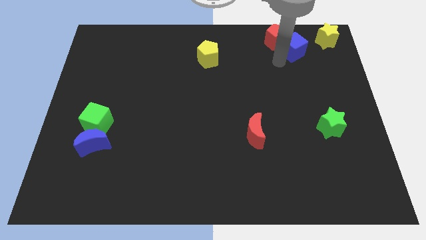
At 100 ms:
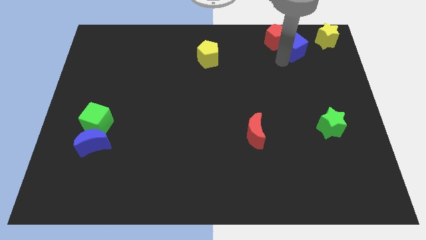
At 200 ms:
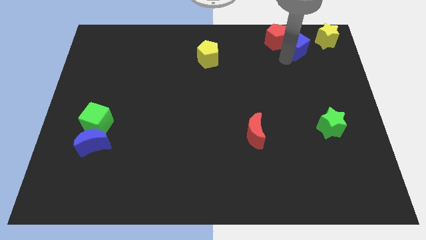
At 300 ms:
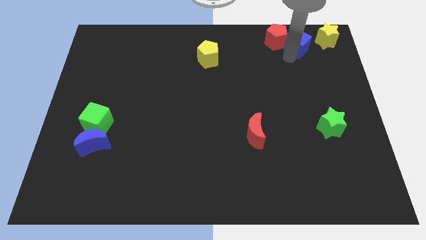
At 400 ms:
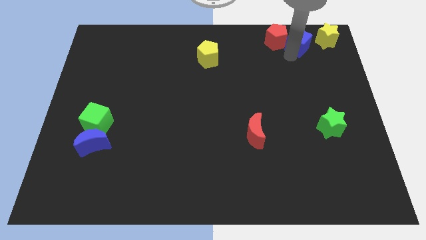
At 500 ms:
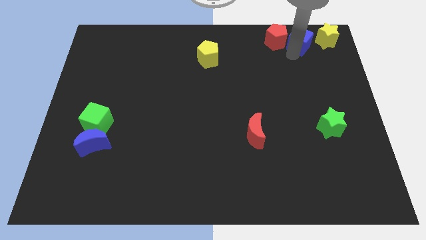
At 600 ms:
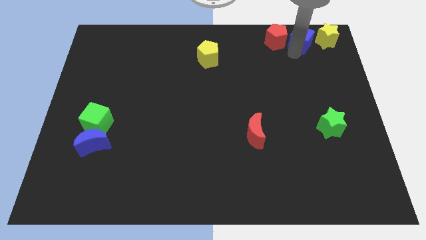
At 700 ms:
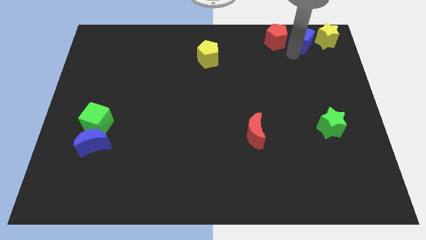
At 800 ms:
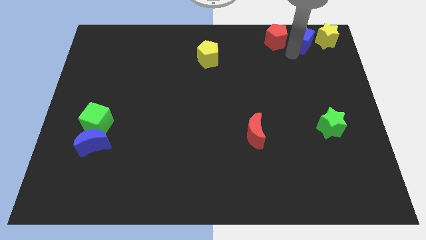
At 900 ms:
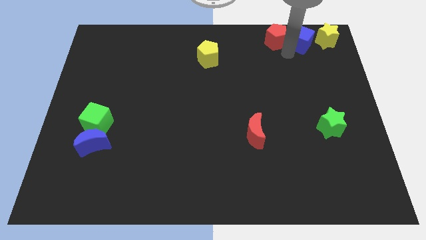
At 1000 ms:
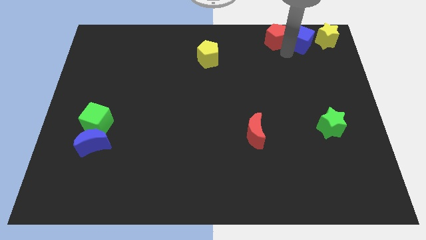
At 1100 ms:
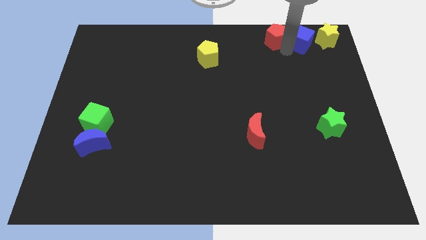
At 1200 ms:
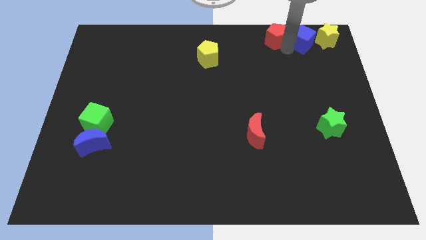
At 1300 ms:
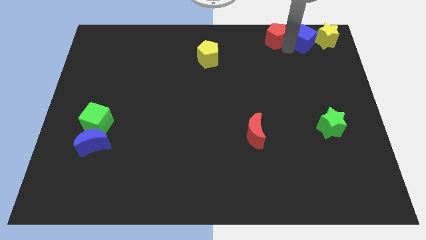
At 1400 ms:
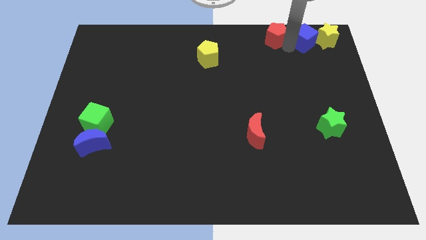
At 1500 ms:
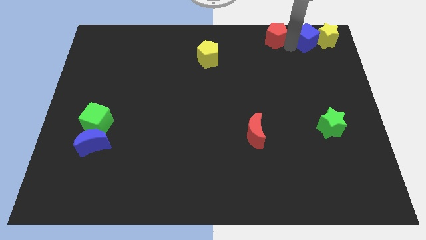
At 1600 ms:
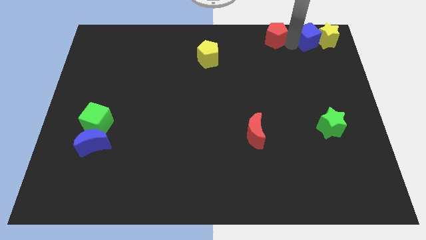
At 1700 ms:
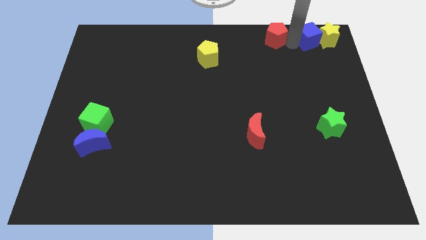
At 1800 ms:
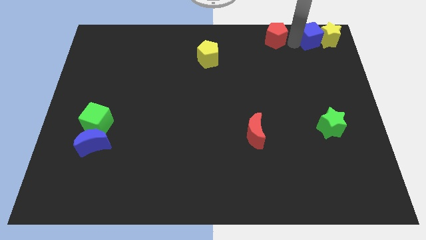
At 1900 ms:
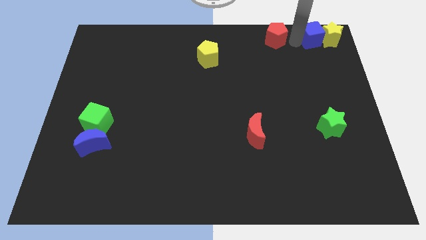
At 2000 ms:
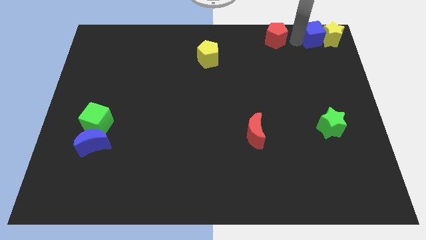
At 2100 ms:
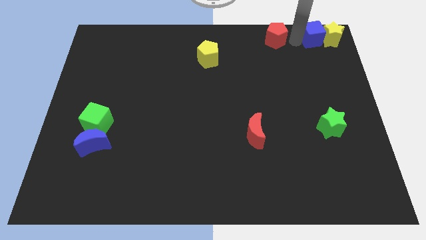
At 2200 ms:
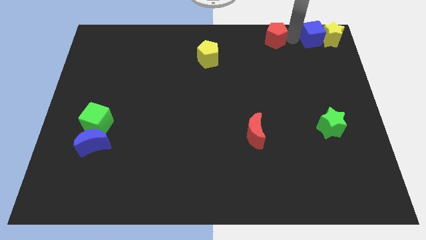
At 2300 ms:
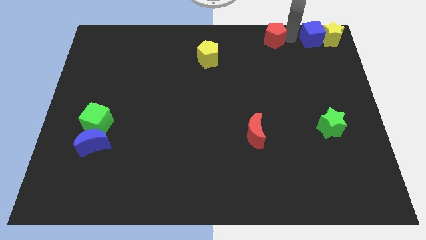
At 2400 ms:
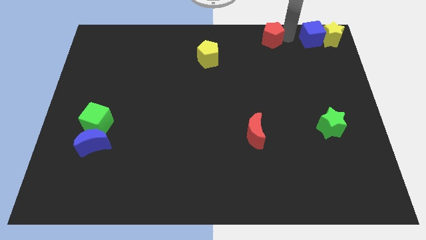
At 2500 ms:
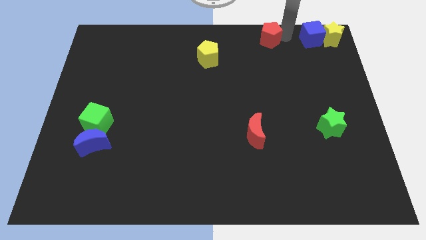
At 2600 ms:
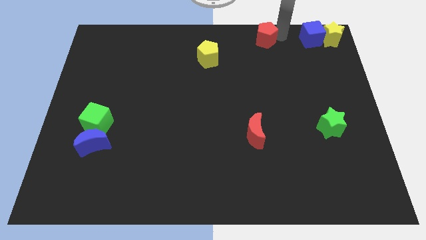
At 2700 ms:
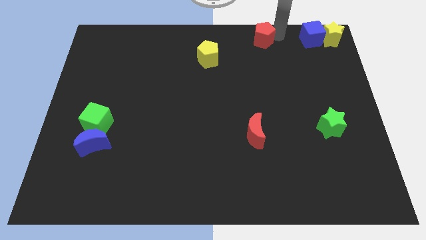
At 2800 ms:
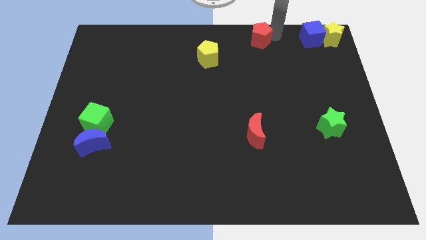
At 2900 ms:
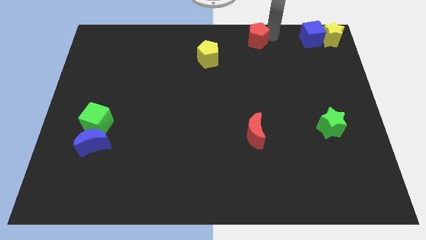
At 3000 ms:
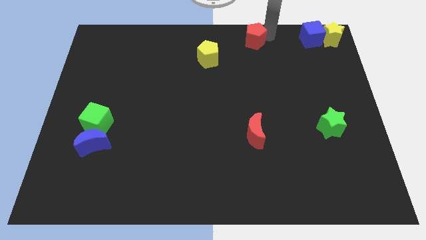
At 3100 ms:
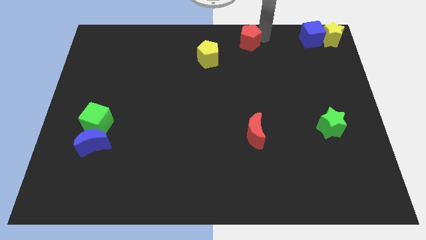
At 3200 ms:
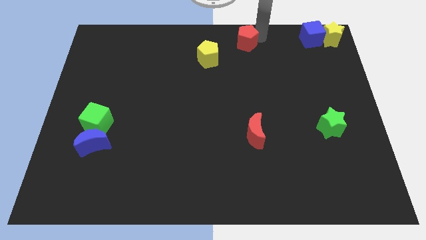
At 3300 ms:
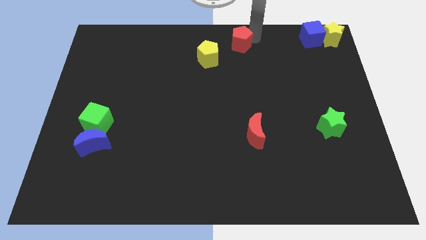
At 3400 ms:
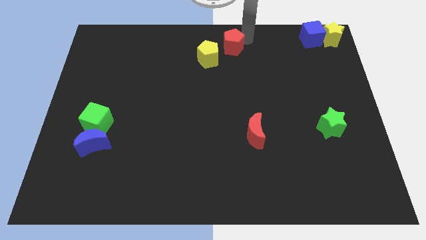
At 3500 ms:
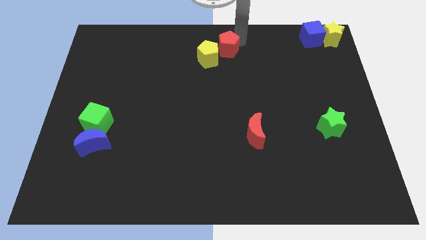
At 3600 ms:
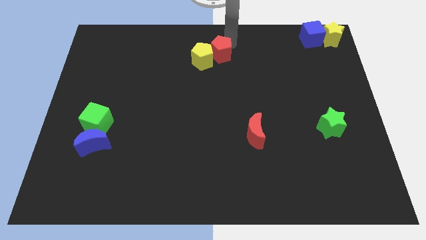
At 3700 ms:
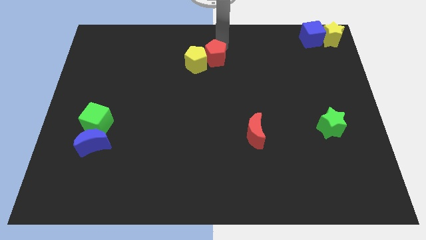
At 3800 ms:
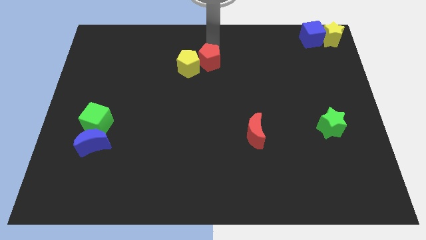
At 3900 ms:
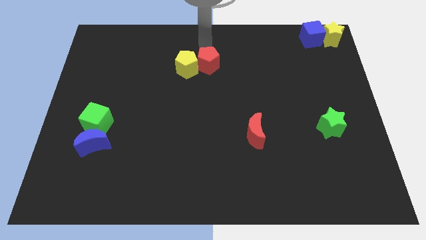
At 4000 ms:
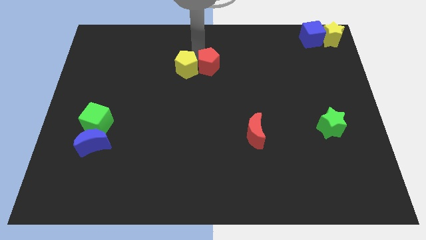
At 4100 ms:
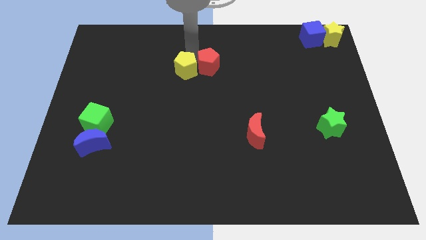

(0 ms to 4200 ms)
move the red pentagon near to the yellow pentagon

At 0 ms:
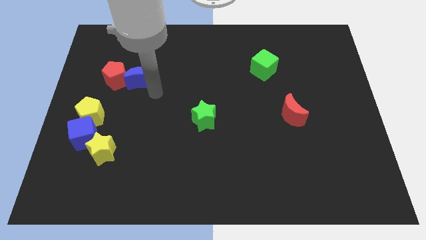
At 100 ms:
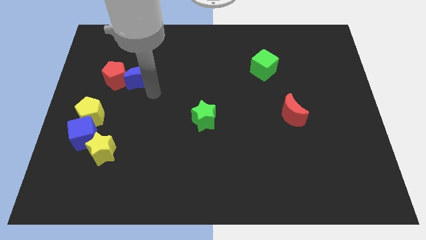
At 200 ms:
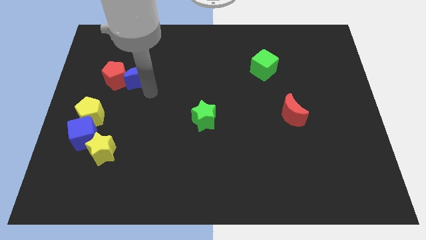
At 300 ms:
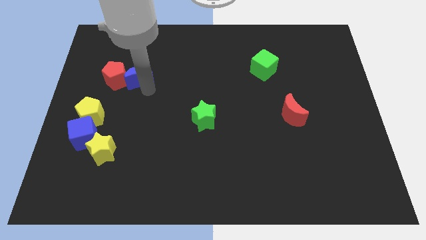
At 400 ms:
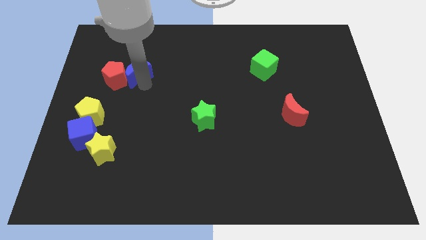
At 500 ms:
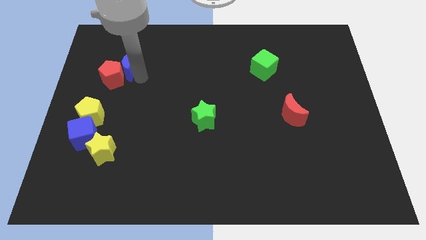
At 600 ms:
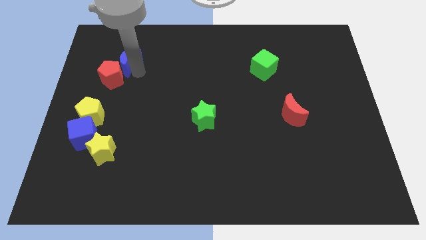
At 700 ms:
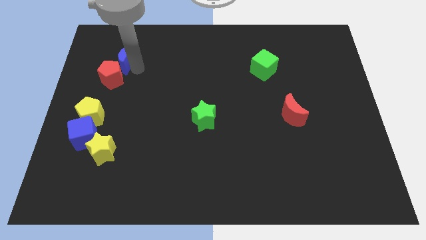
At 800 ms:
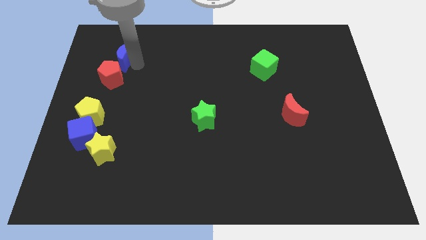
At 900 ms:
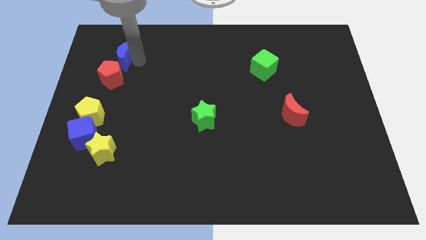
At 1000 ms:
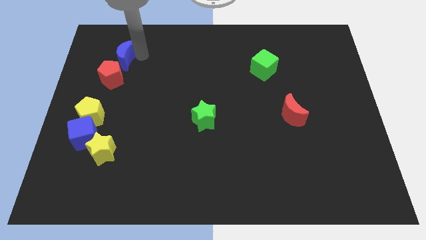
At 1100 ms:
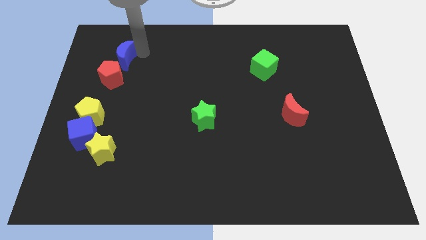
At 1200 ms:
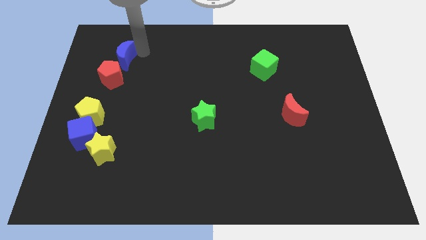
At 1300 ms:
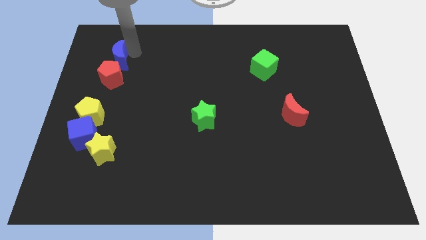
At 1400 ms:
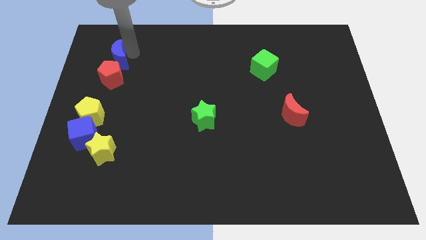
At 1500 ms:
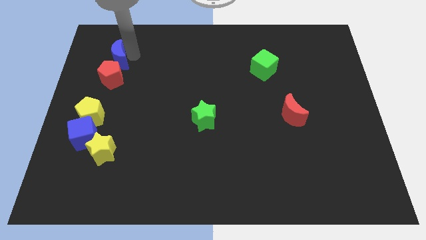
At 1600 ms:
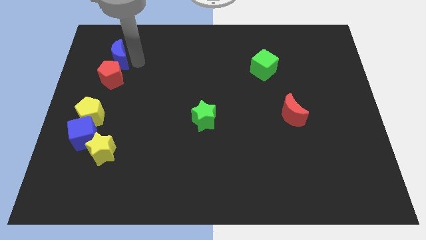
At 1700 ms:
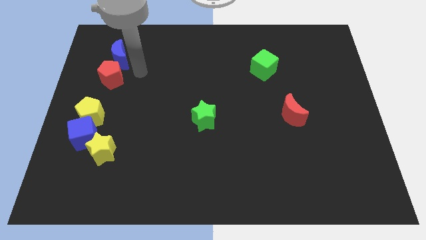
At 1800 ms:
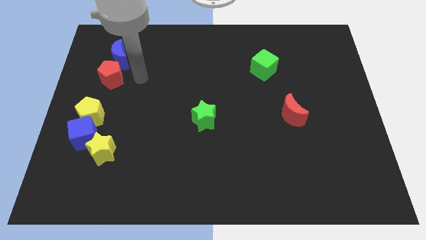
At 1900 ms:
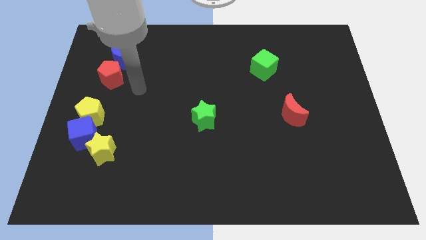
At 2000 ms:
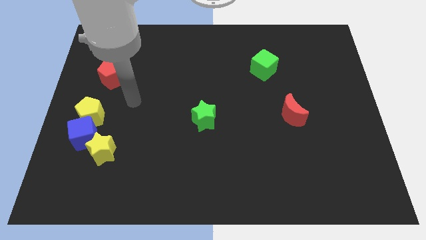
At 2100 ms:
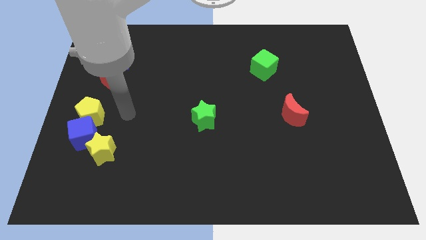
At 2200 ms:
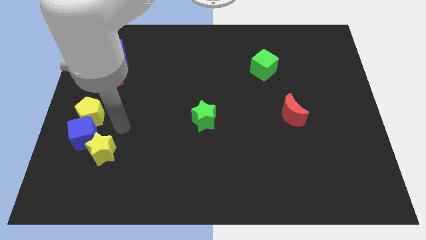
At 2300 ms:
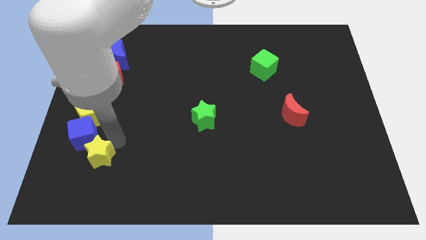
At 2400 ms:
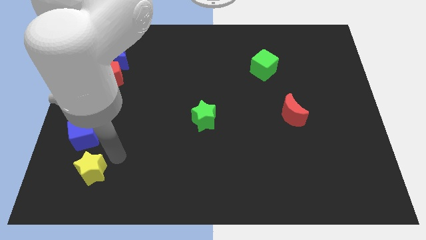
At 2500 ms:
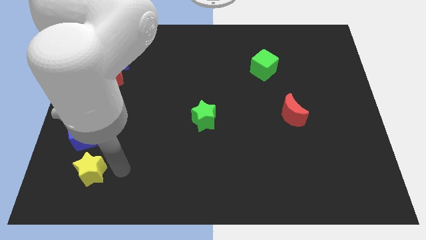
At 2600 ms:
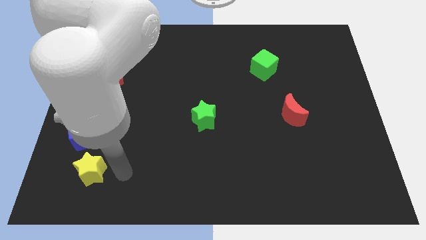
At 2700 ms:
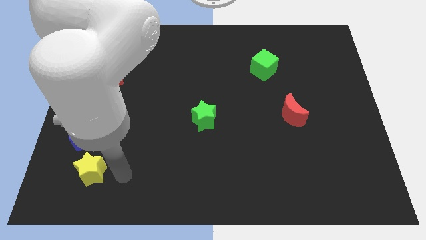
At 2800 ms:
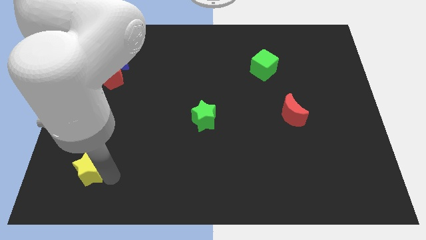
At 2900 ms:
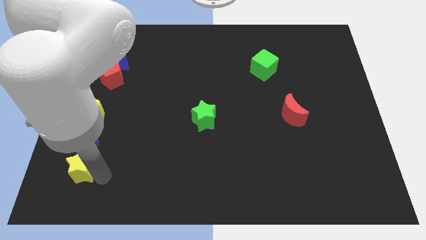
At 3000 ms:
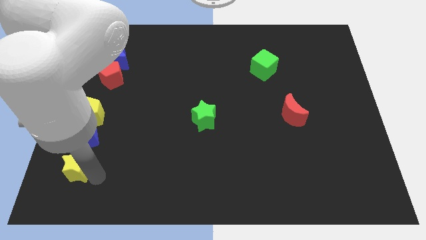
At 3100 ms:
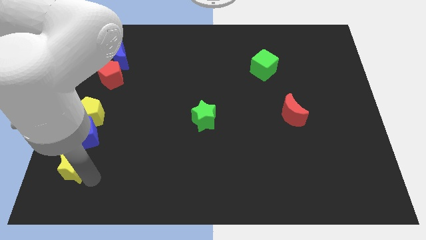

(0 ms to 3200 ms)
place the yellow star below blue cube

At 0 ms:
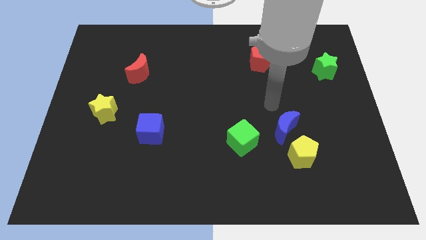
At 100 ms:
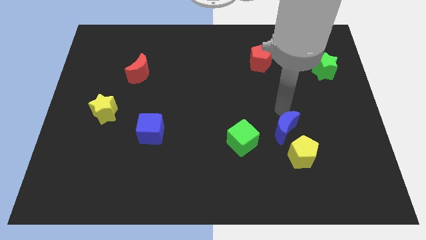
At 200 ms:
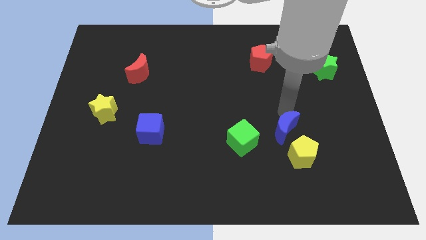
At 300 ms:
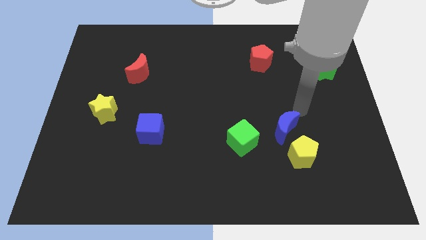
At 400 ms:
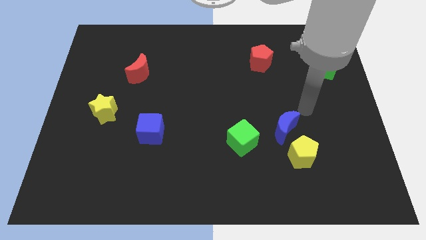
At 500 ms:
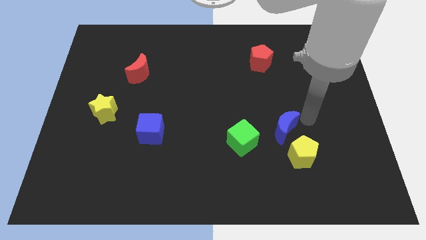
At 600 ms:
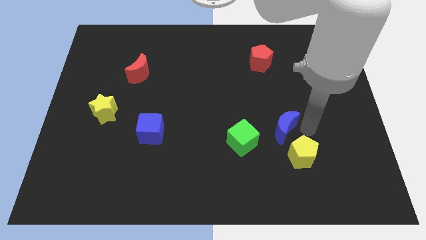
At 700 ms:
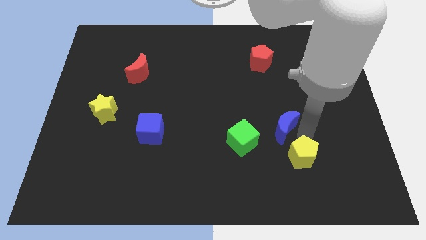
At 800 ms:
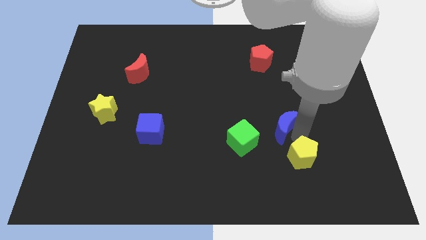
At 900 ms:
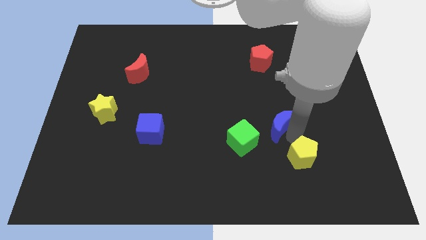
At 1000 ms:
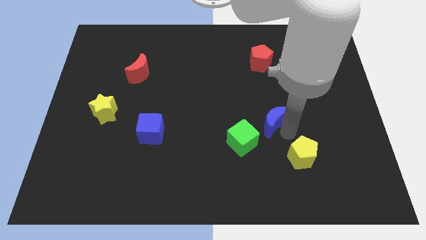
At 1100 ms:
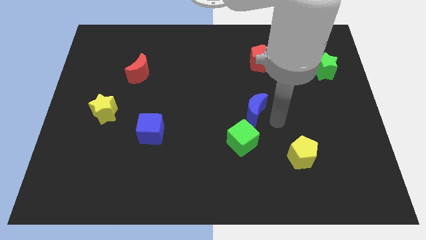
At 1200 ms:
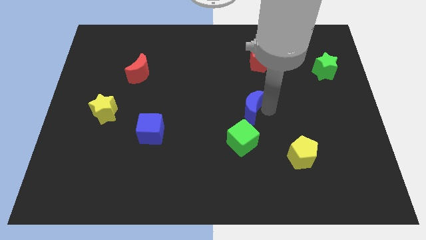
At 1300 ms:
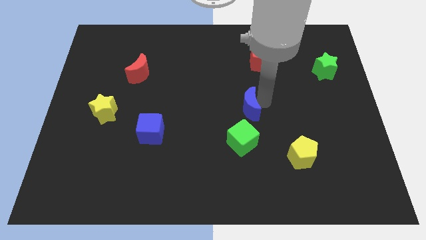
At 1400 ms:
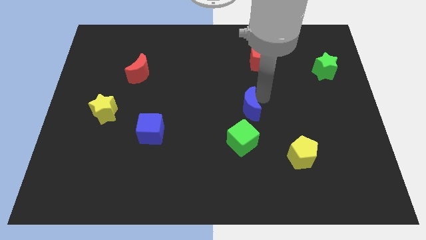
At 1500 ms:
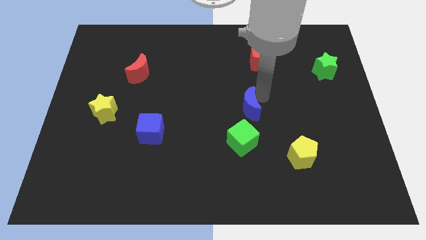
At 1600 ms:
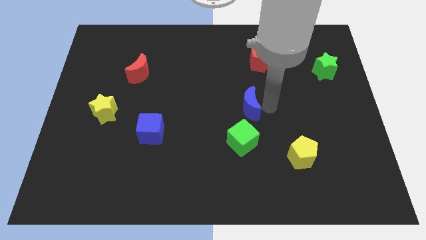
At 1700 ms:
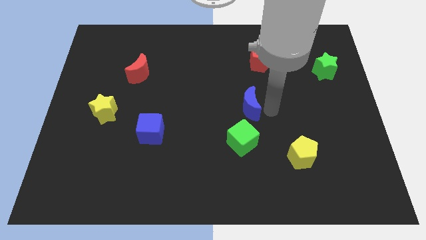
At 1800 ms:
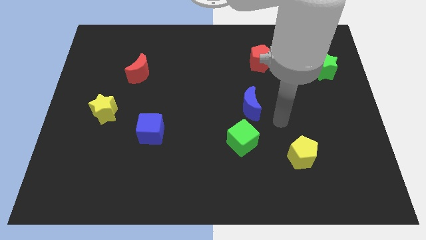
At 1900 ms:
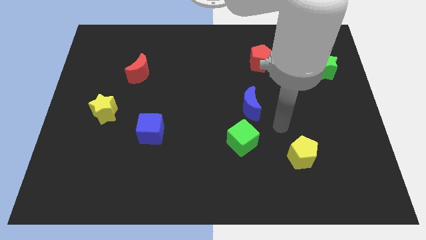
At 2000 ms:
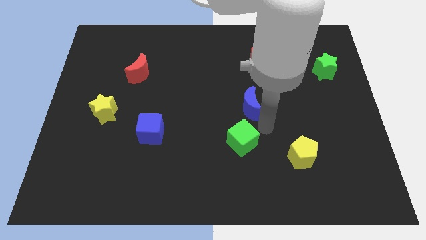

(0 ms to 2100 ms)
move the blue crescent close to the green cube
